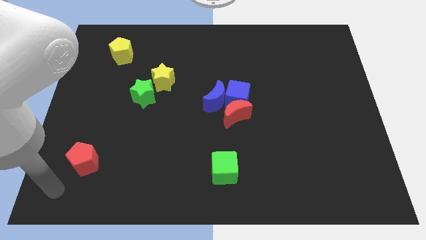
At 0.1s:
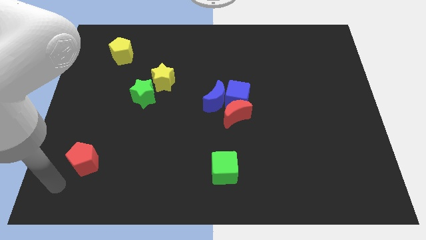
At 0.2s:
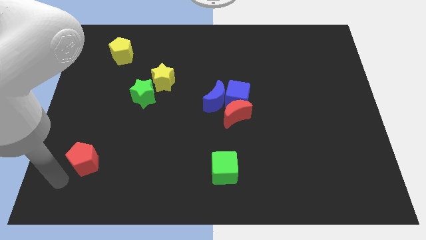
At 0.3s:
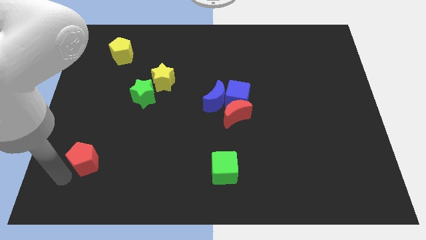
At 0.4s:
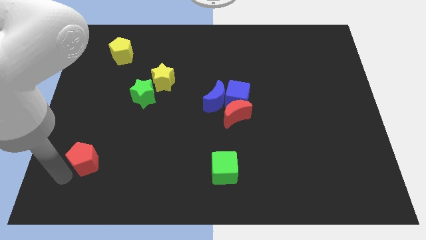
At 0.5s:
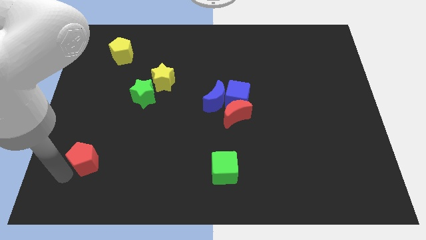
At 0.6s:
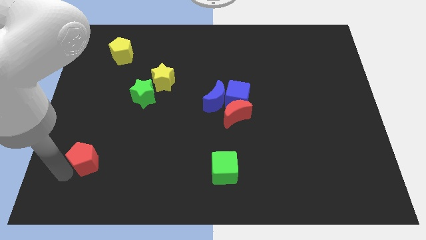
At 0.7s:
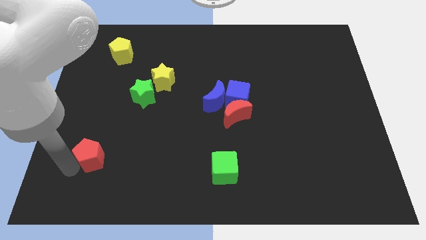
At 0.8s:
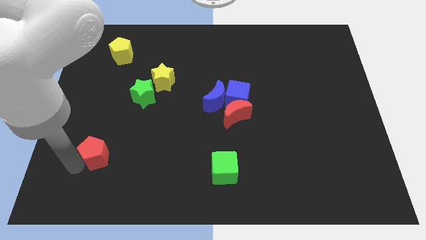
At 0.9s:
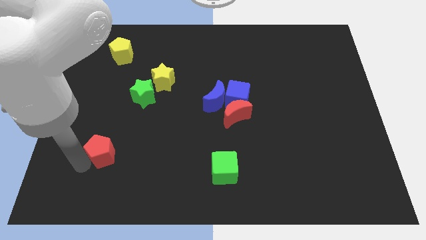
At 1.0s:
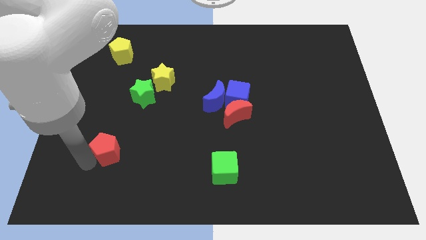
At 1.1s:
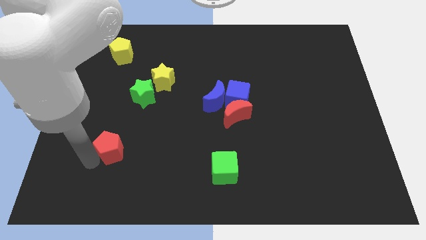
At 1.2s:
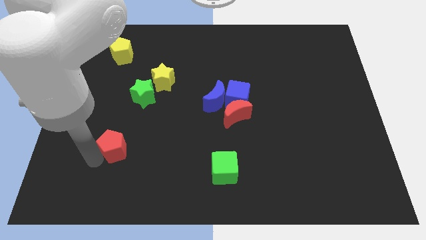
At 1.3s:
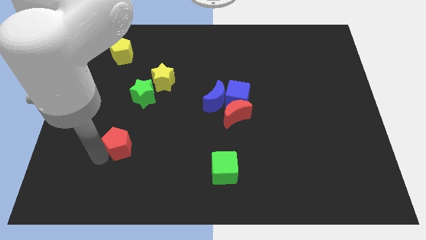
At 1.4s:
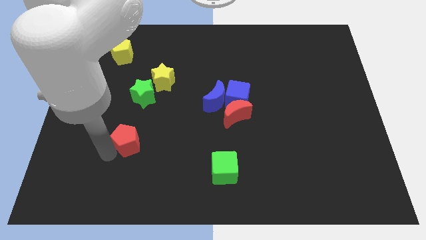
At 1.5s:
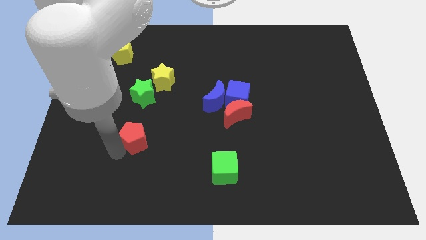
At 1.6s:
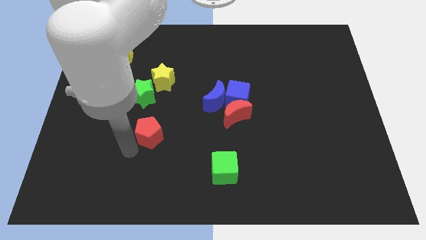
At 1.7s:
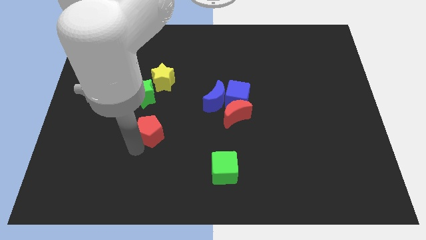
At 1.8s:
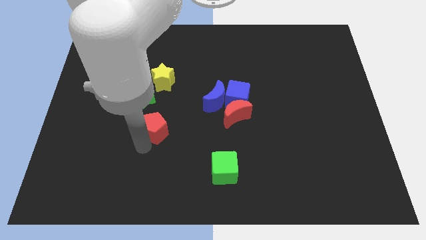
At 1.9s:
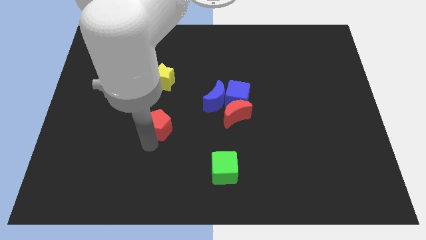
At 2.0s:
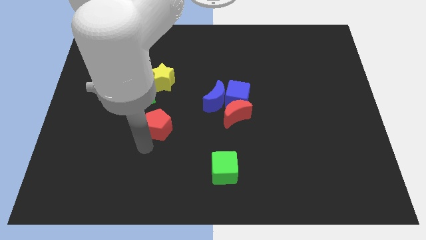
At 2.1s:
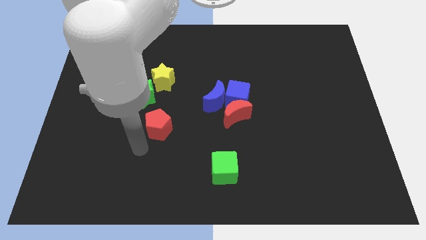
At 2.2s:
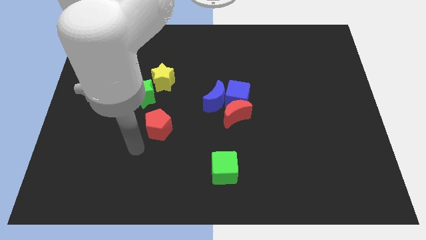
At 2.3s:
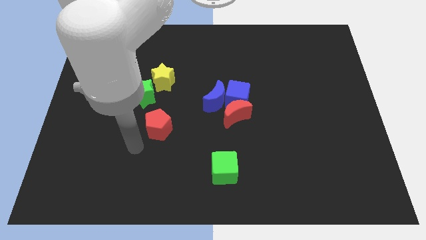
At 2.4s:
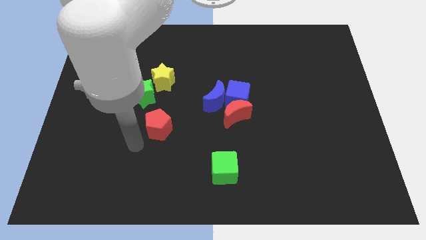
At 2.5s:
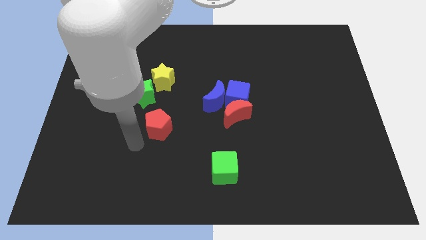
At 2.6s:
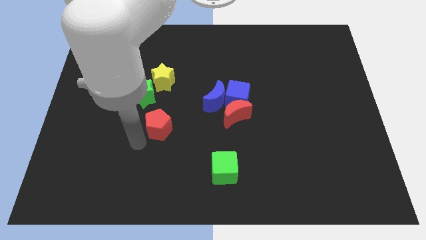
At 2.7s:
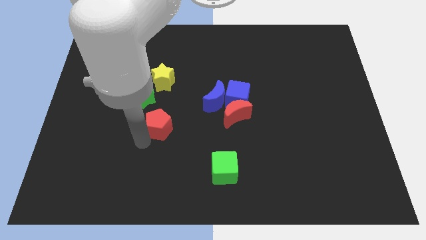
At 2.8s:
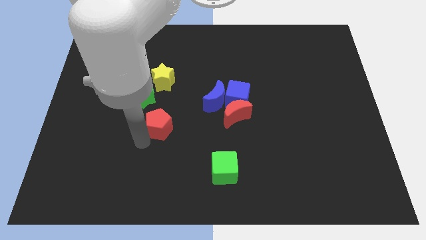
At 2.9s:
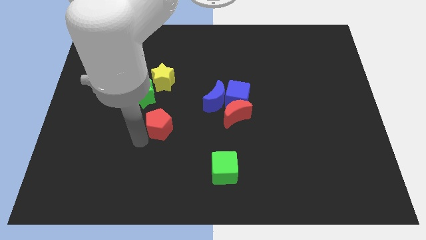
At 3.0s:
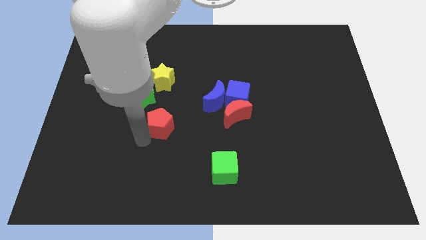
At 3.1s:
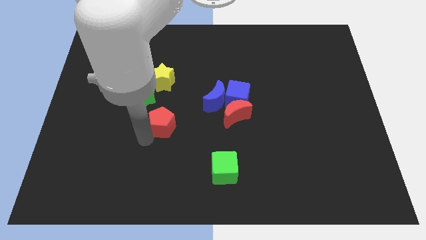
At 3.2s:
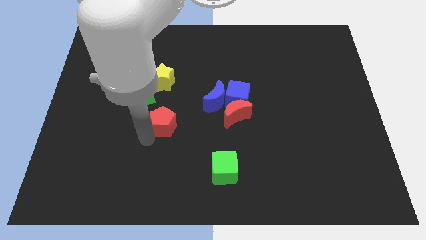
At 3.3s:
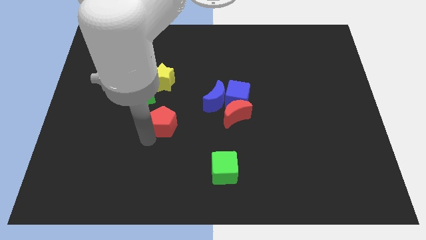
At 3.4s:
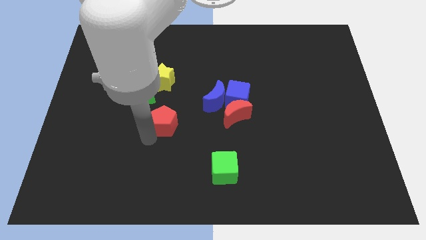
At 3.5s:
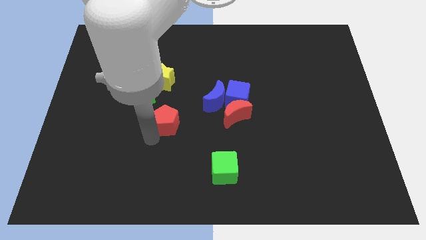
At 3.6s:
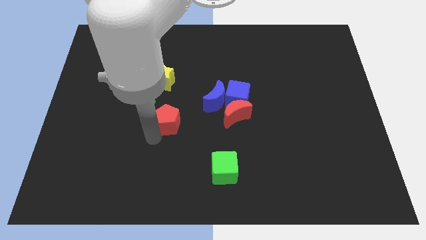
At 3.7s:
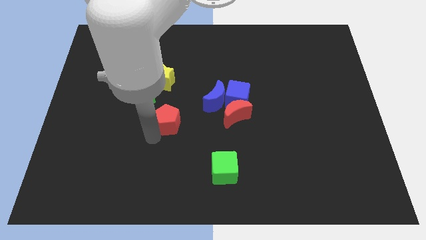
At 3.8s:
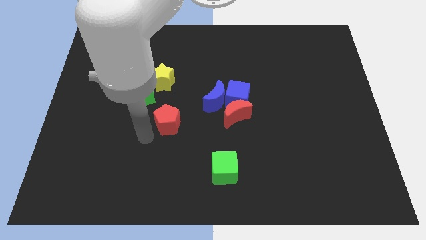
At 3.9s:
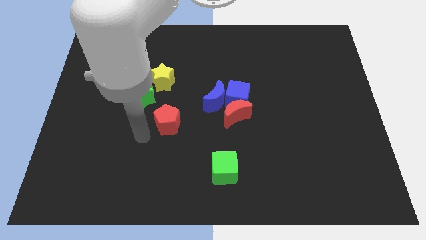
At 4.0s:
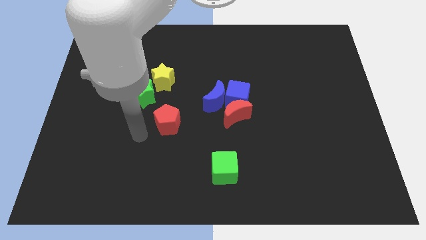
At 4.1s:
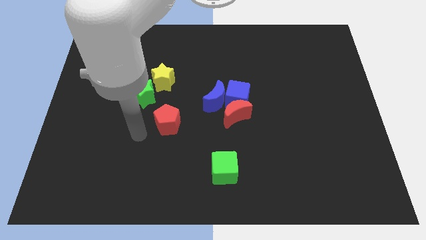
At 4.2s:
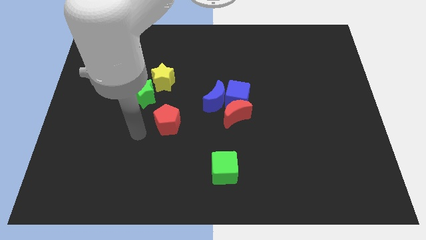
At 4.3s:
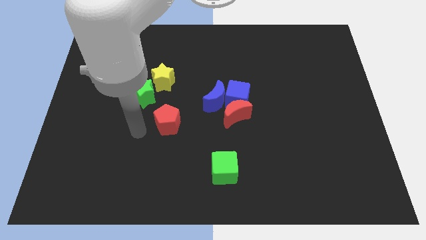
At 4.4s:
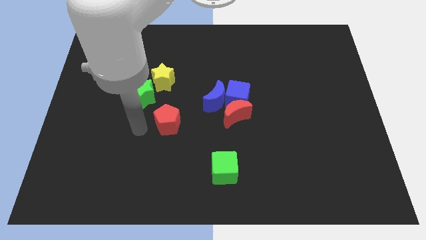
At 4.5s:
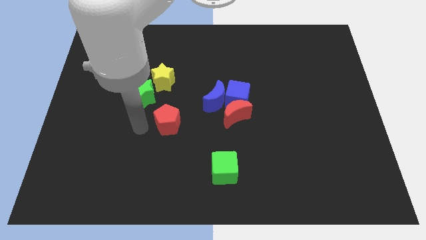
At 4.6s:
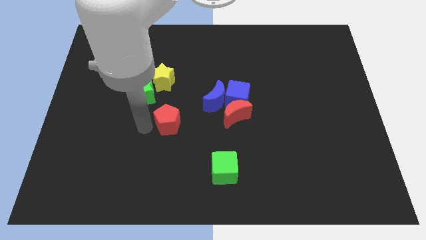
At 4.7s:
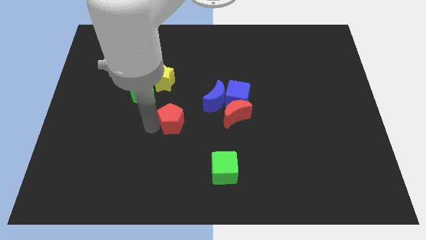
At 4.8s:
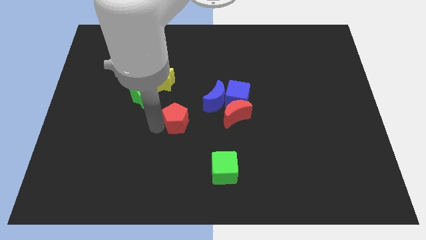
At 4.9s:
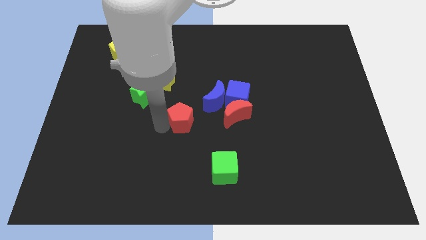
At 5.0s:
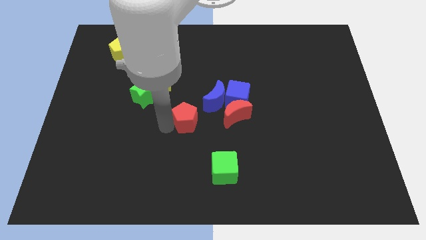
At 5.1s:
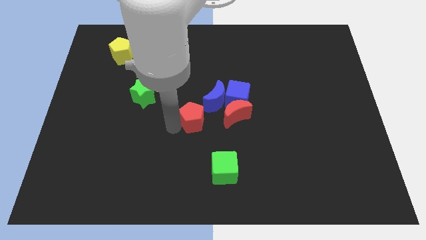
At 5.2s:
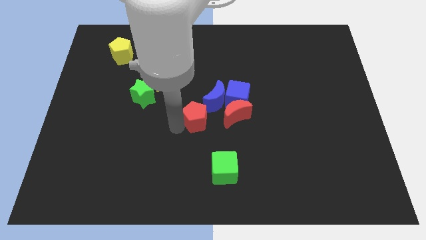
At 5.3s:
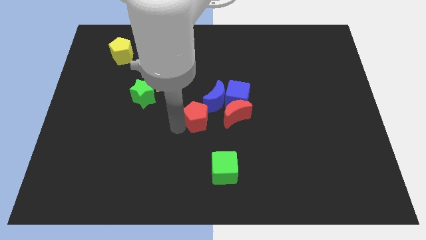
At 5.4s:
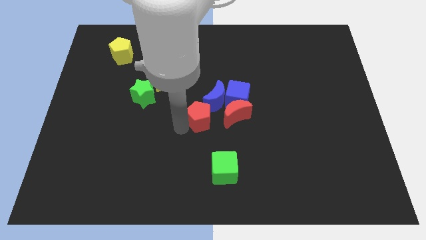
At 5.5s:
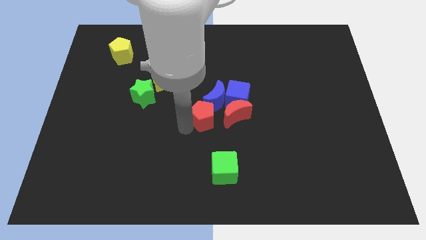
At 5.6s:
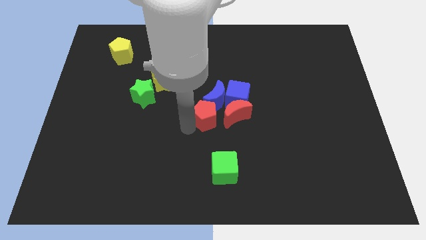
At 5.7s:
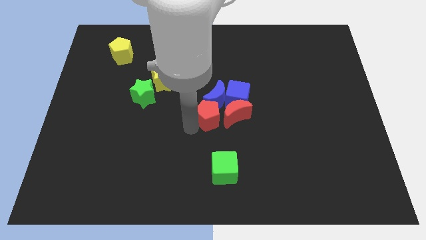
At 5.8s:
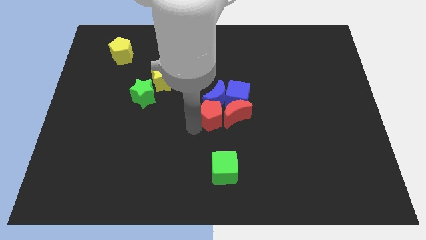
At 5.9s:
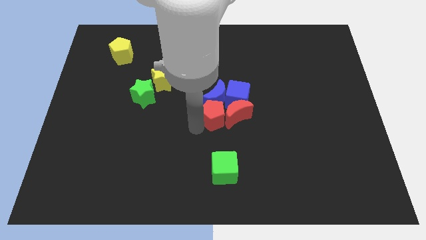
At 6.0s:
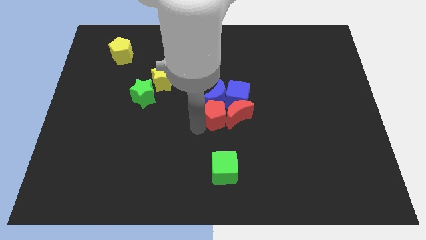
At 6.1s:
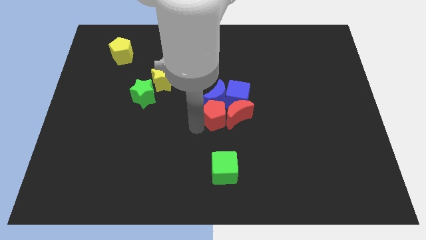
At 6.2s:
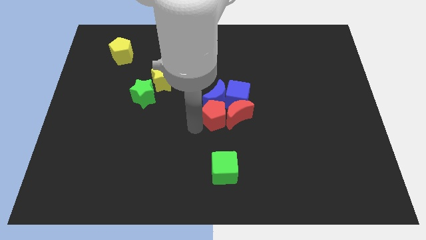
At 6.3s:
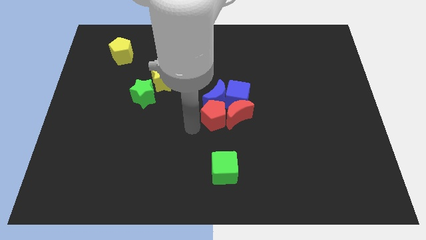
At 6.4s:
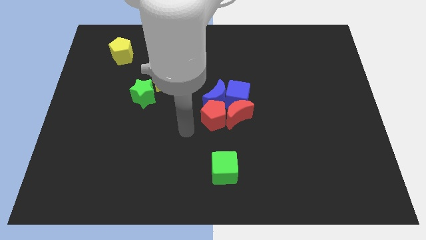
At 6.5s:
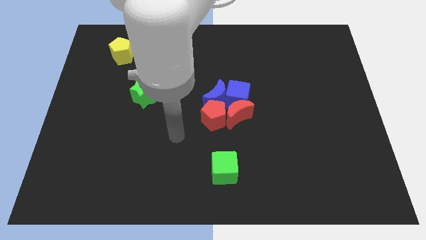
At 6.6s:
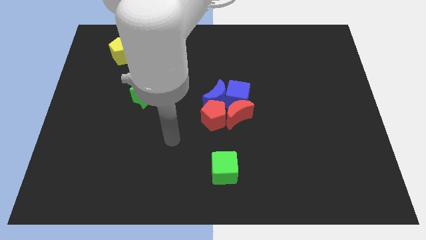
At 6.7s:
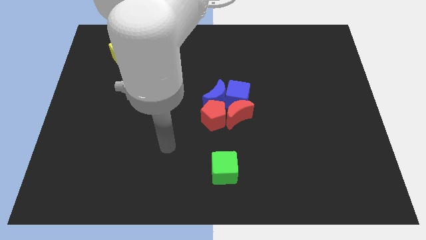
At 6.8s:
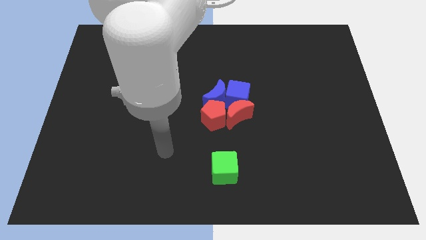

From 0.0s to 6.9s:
move the red pentagon to the left of the red crescent

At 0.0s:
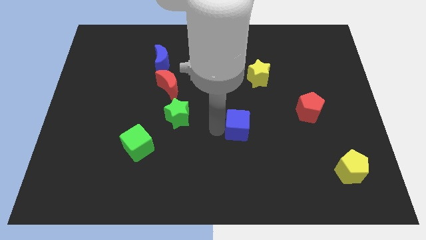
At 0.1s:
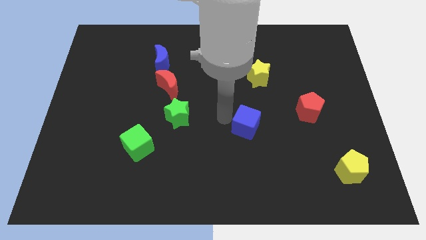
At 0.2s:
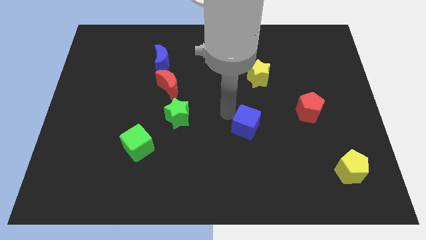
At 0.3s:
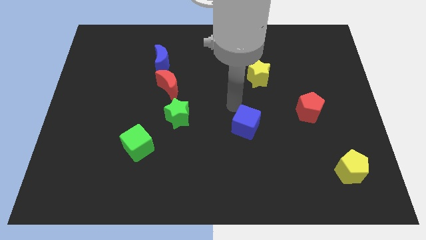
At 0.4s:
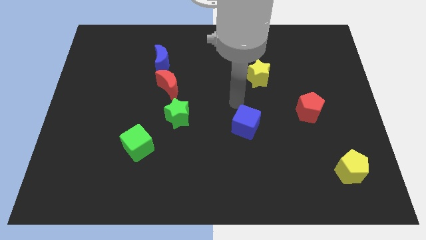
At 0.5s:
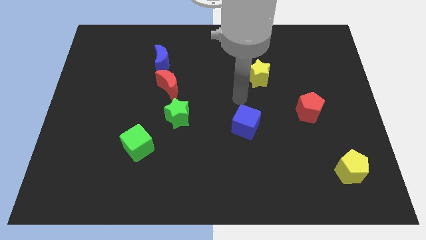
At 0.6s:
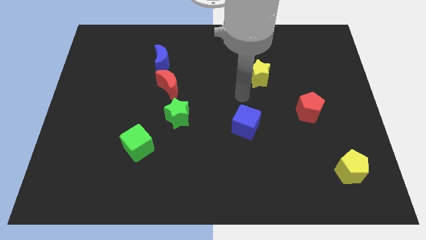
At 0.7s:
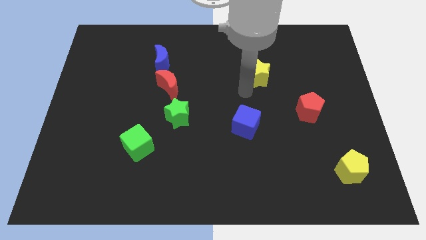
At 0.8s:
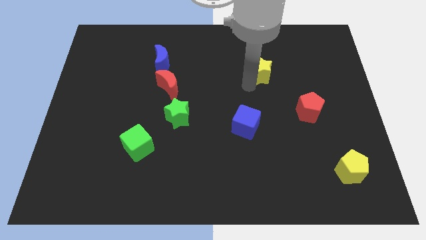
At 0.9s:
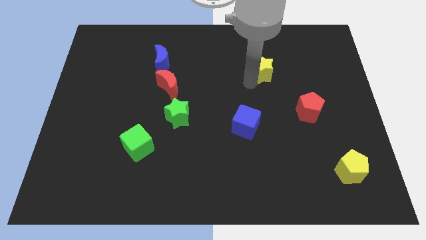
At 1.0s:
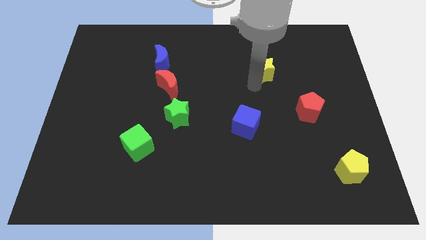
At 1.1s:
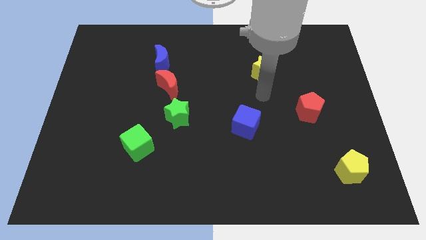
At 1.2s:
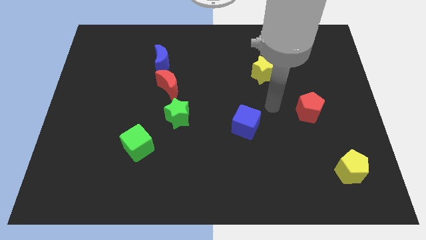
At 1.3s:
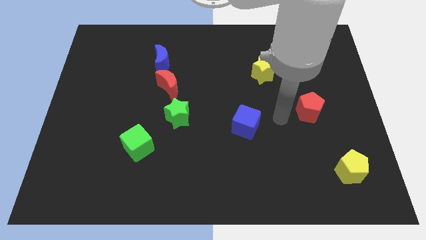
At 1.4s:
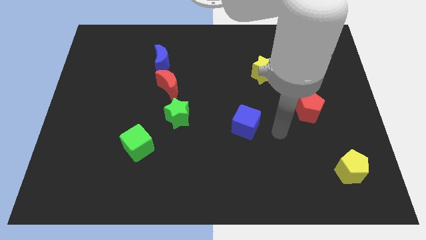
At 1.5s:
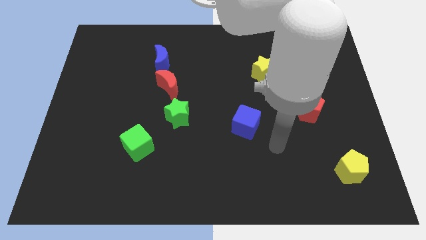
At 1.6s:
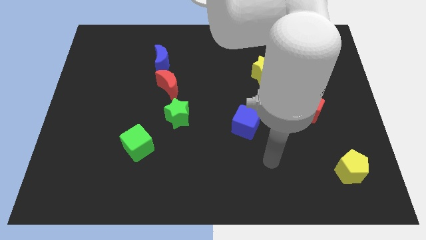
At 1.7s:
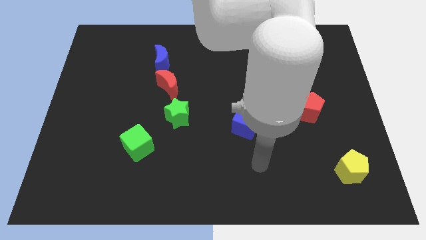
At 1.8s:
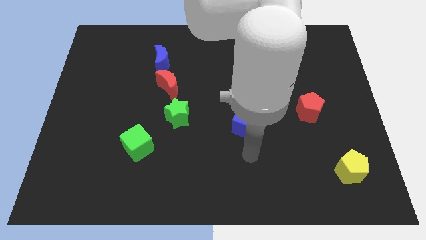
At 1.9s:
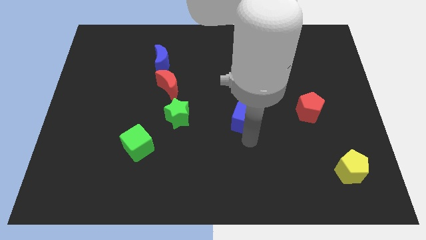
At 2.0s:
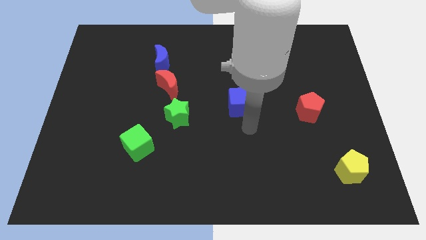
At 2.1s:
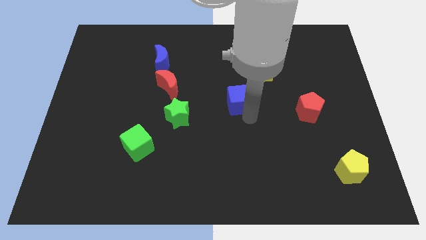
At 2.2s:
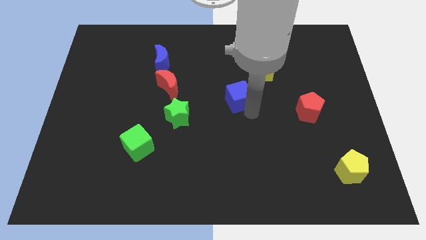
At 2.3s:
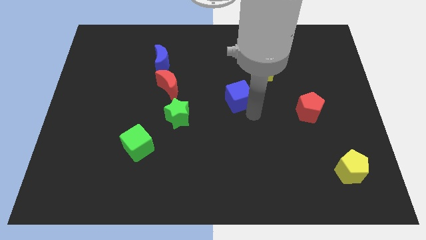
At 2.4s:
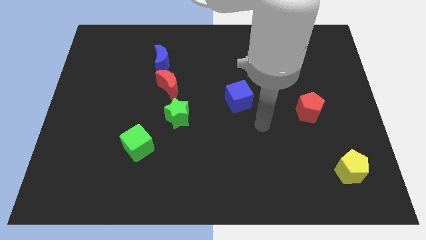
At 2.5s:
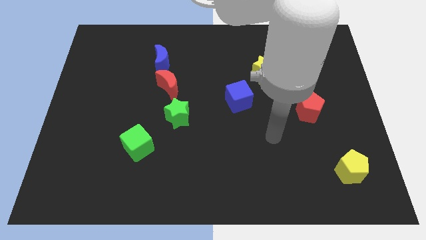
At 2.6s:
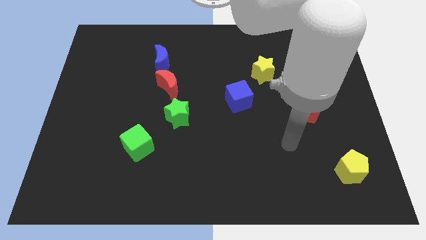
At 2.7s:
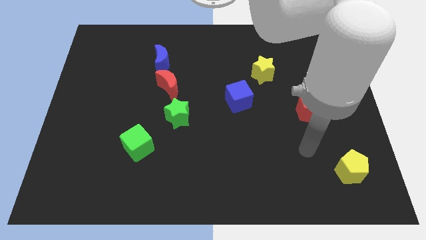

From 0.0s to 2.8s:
slightly push the blue cube up
